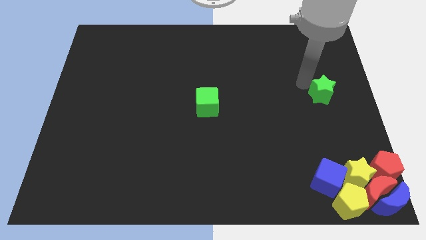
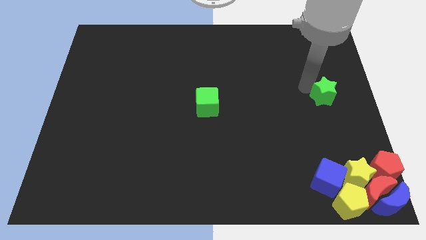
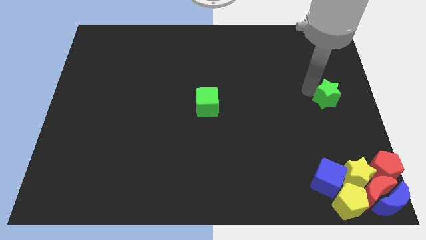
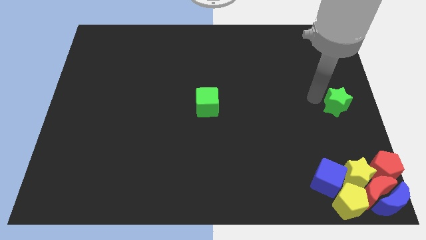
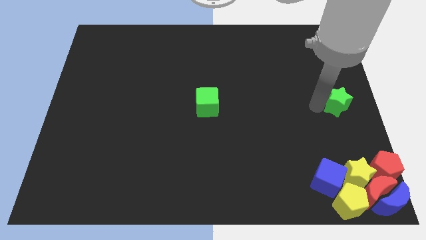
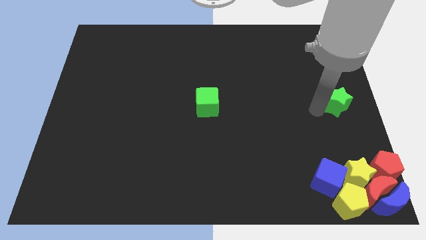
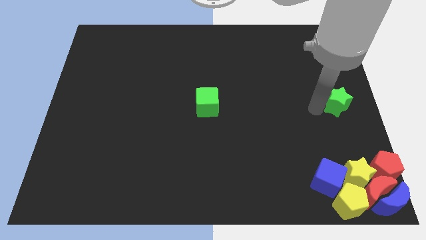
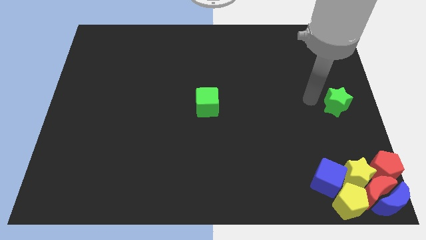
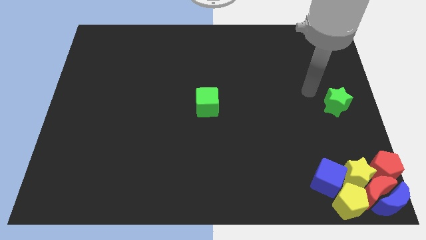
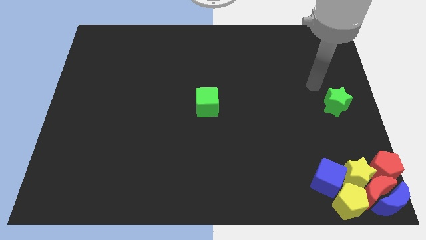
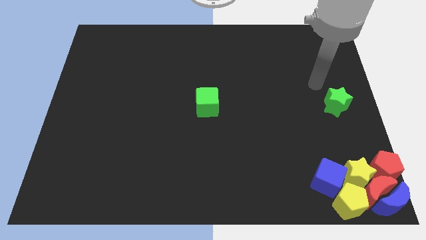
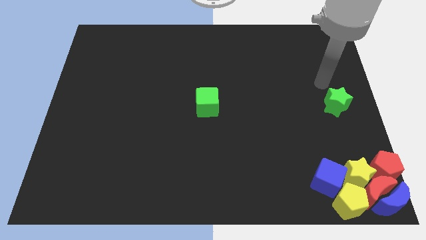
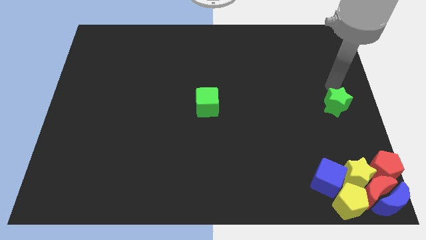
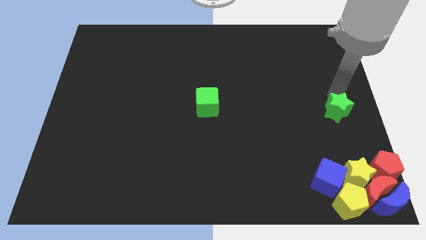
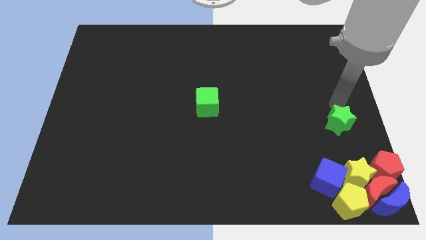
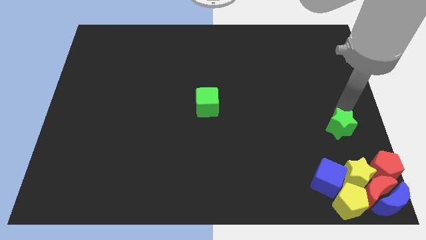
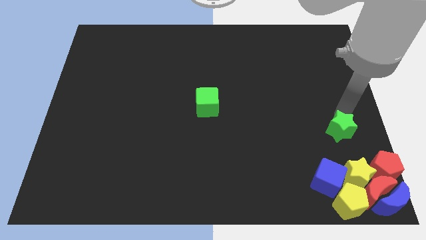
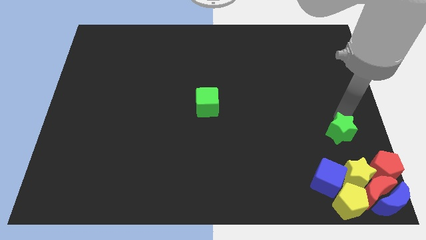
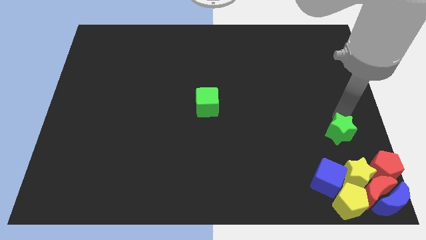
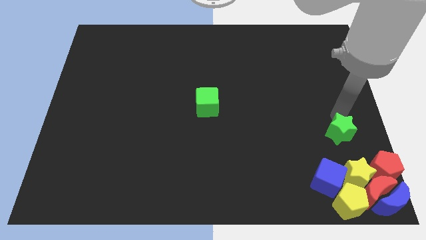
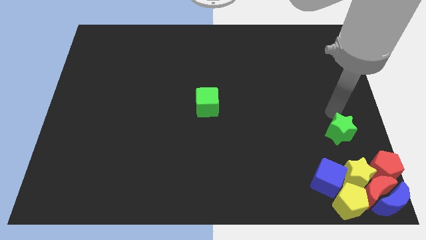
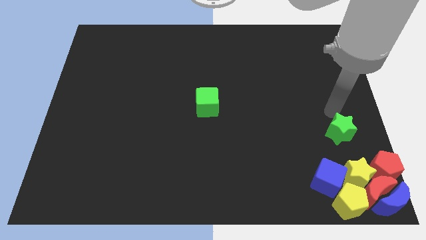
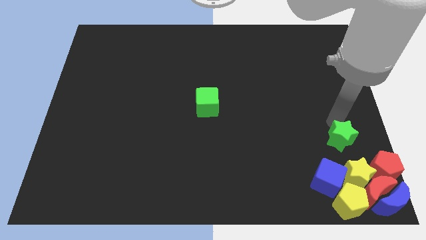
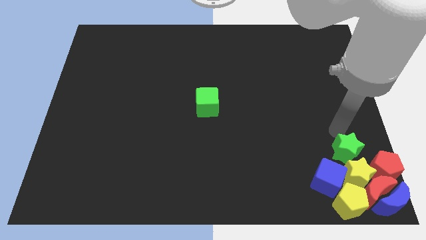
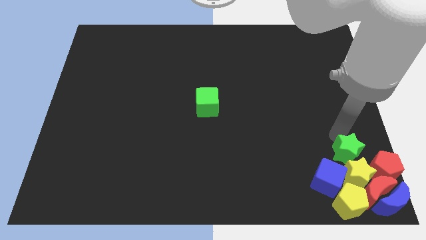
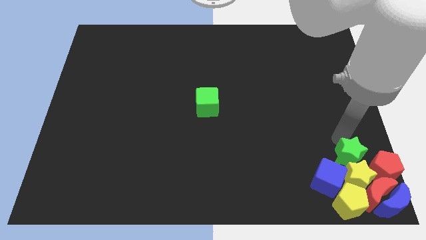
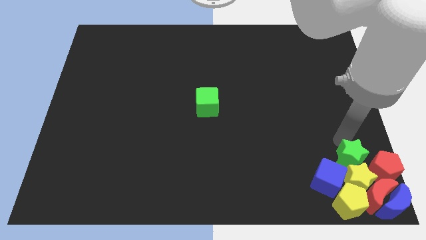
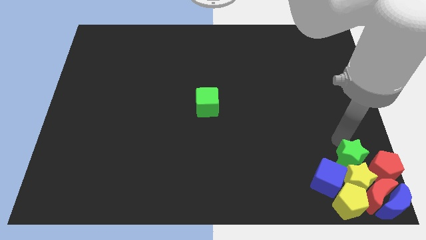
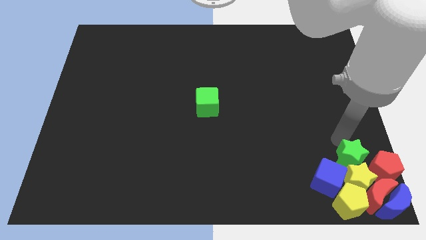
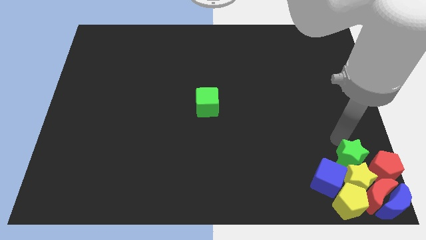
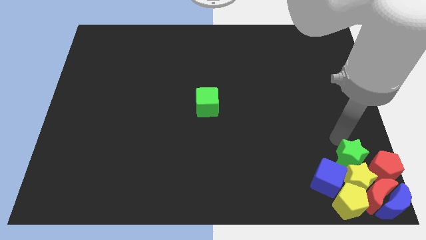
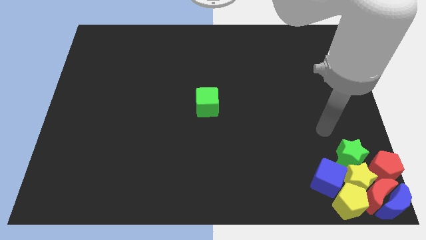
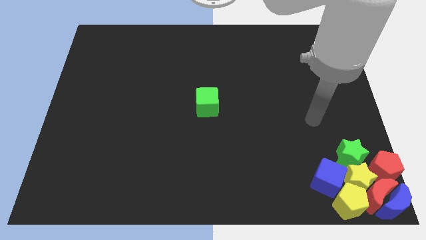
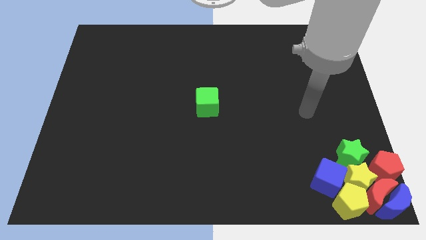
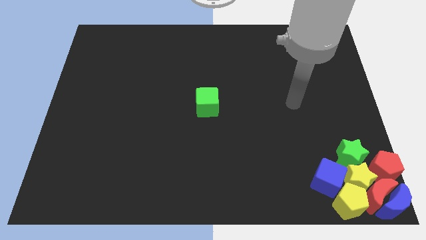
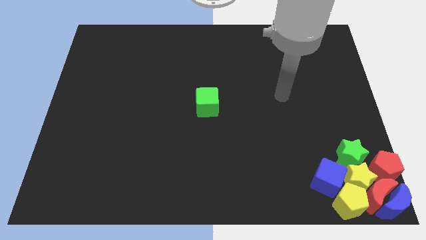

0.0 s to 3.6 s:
push the green star towards the bottom right of the board

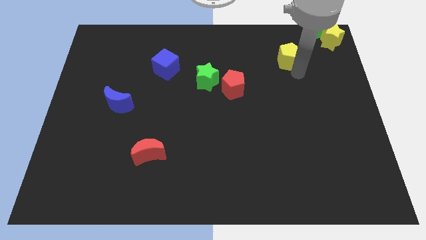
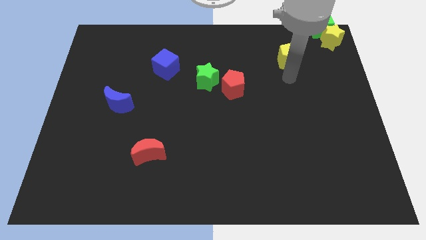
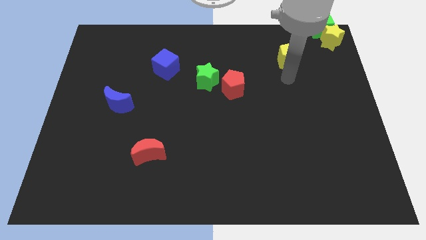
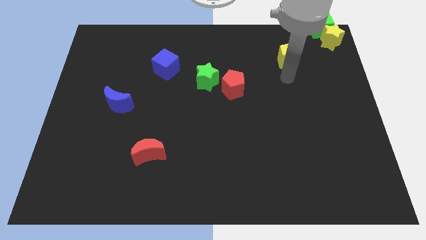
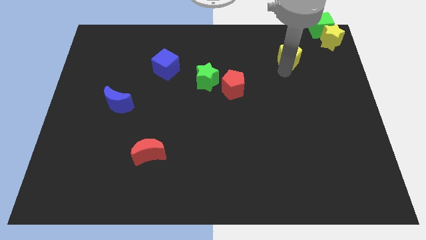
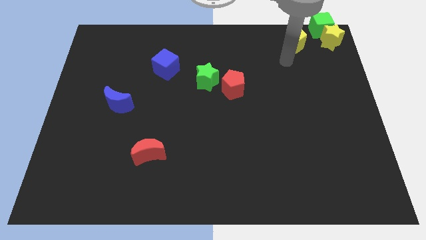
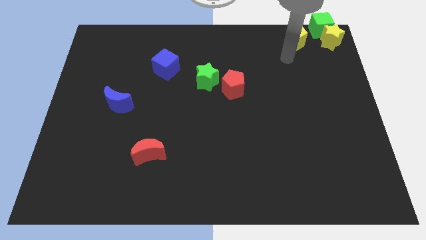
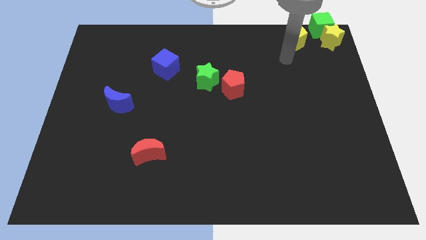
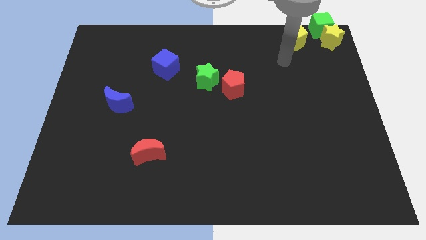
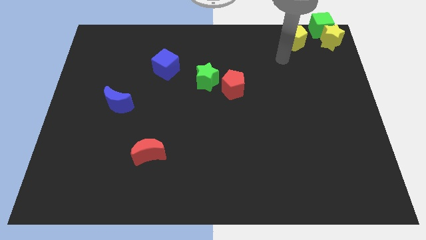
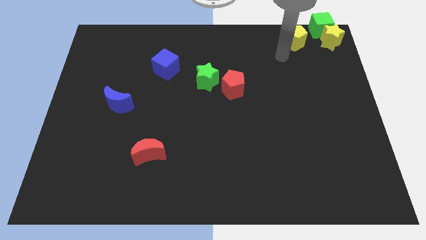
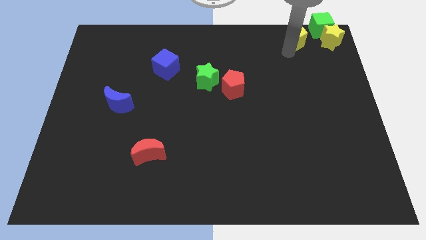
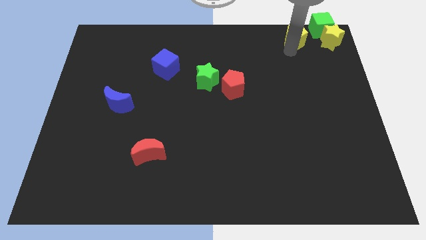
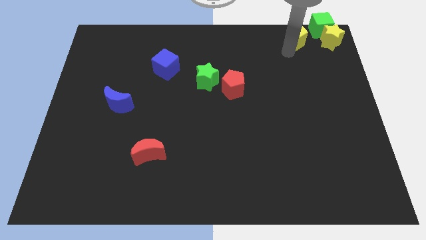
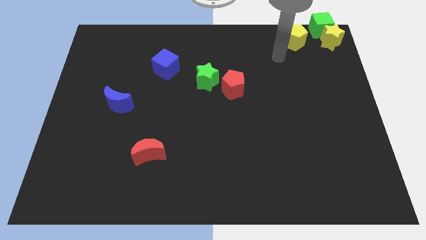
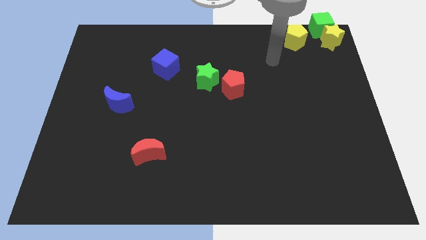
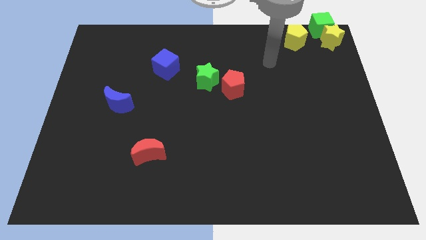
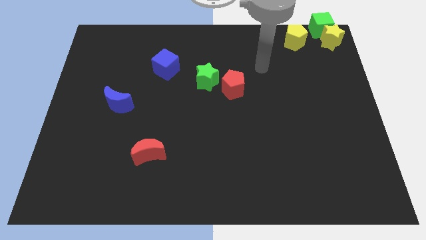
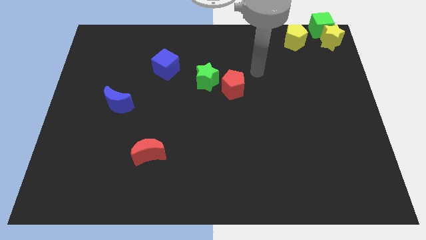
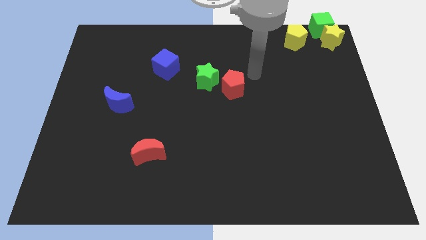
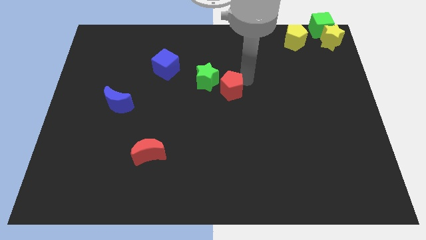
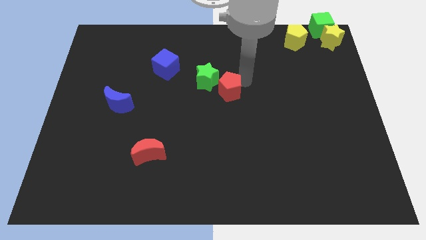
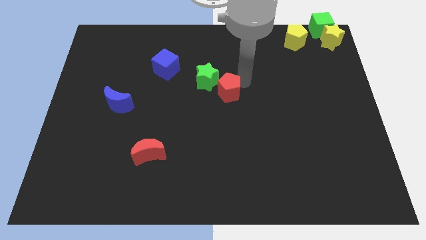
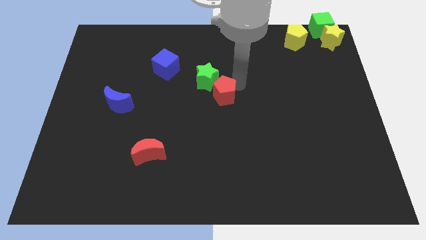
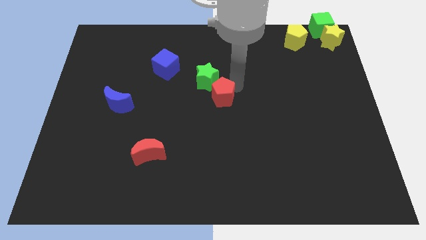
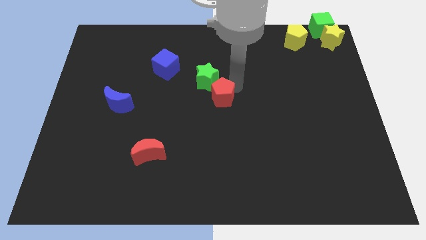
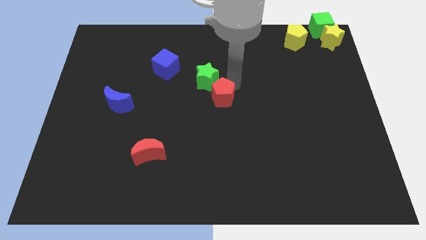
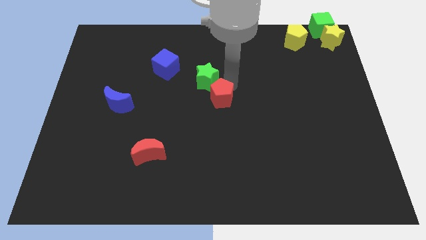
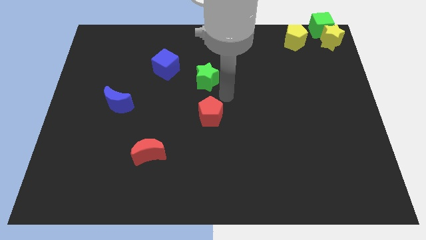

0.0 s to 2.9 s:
place the red pentagon below the green star

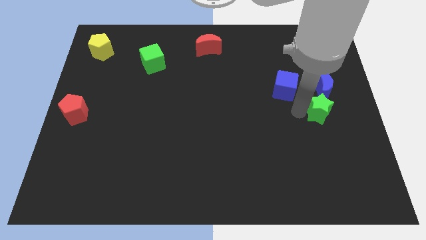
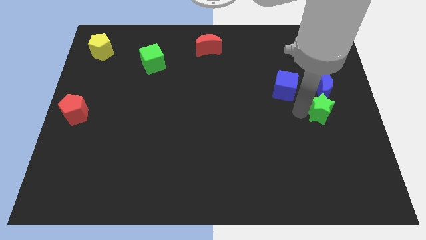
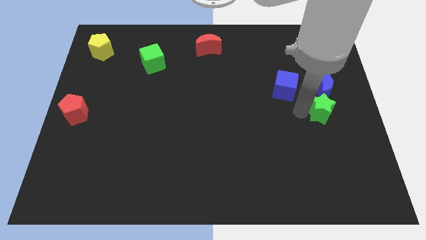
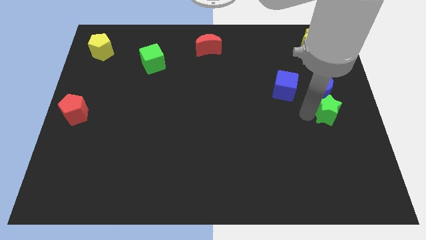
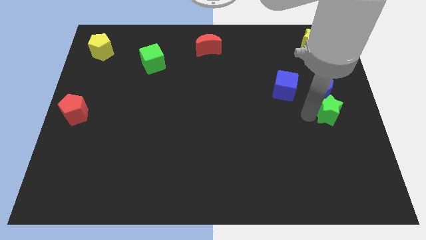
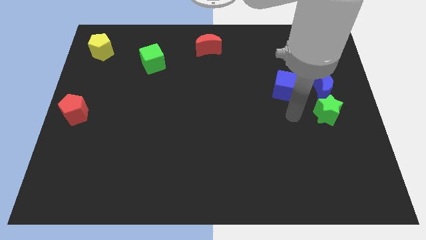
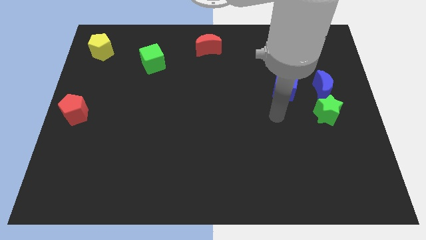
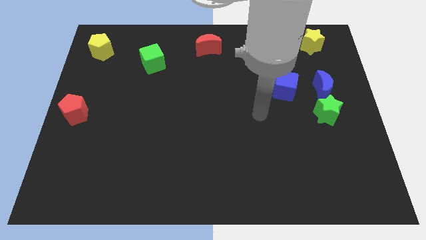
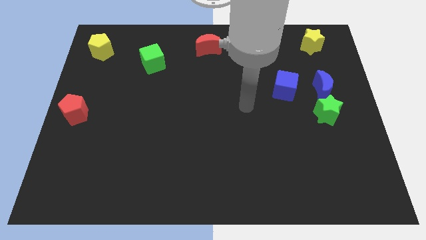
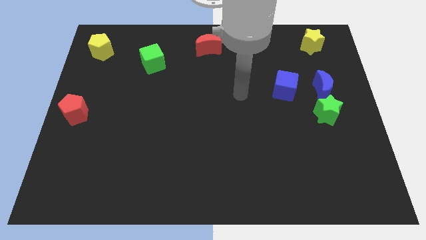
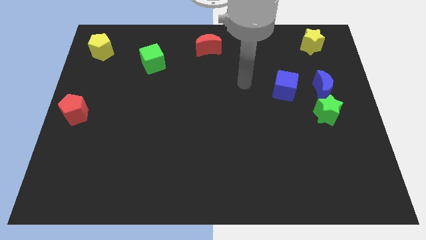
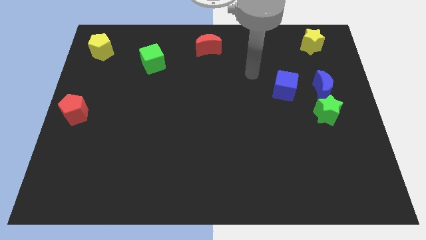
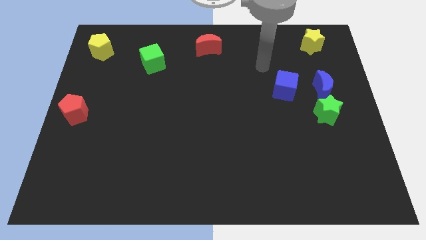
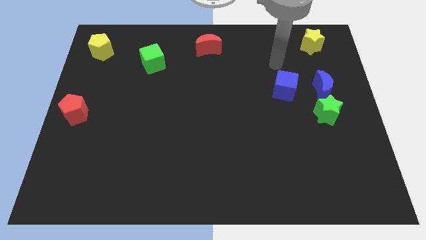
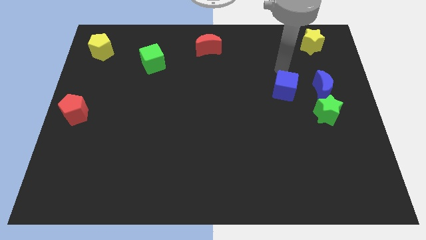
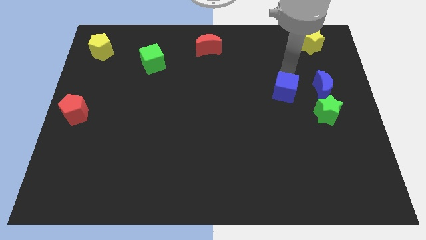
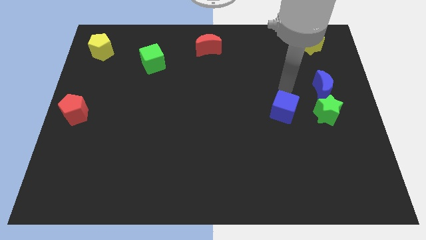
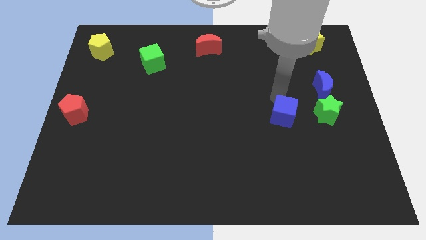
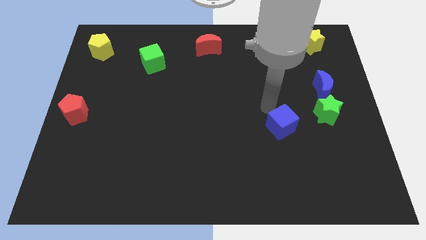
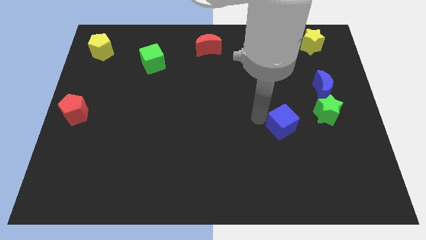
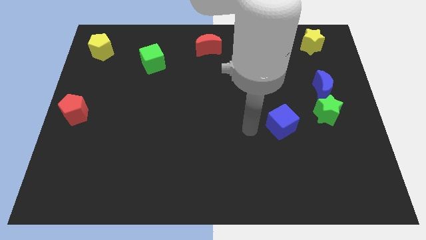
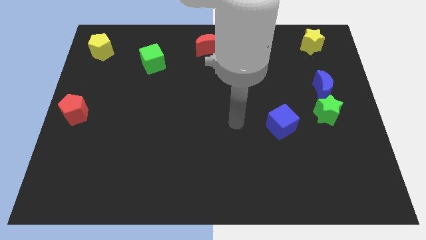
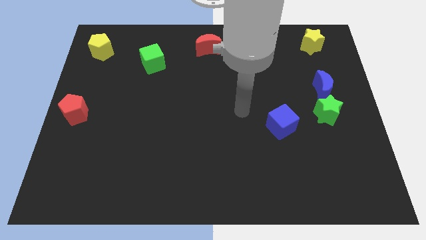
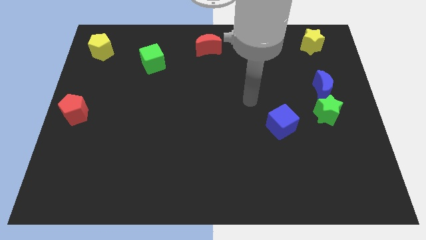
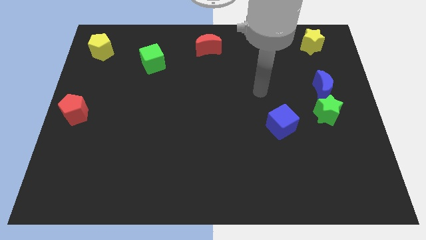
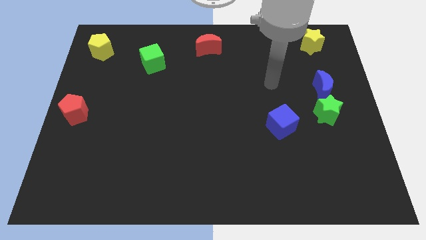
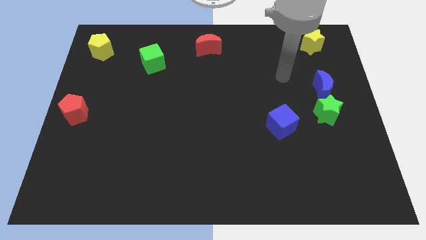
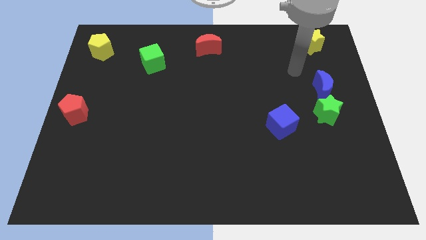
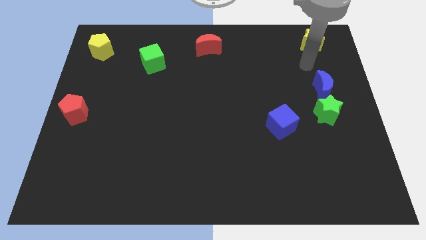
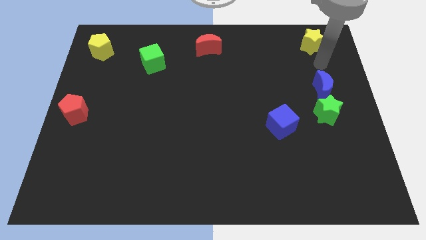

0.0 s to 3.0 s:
slightly move the blue cube towards down
